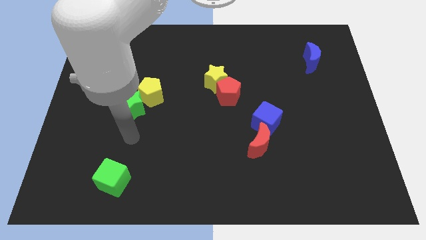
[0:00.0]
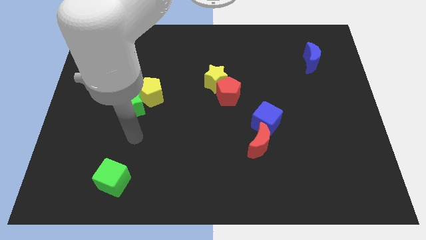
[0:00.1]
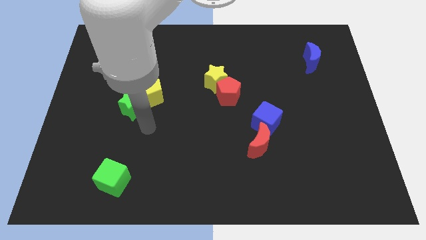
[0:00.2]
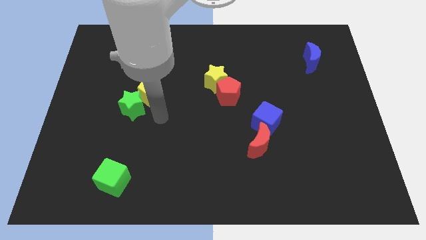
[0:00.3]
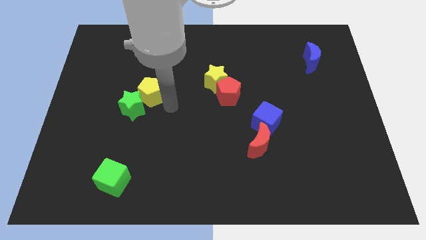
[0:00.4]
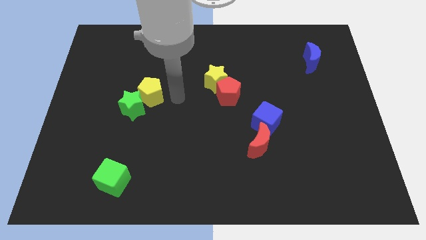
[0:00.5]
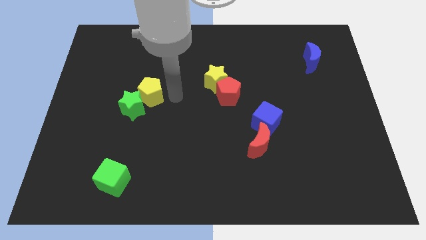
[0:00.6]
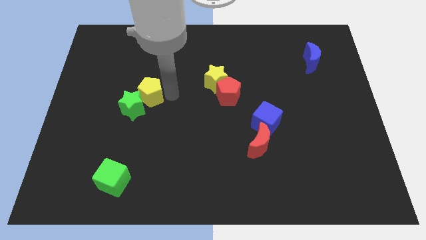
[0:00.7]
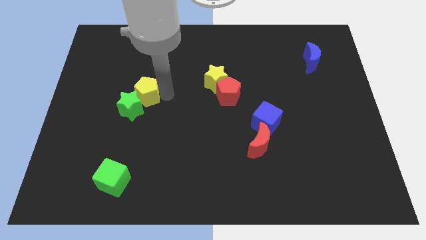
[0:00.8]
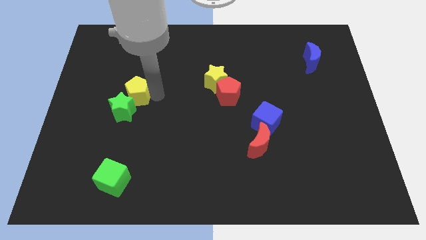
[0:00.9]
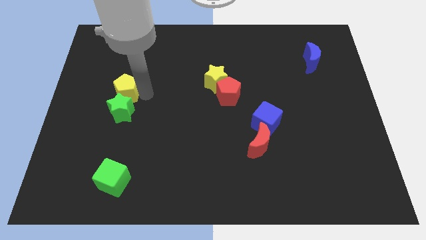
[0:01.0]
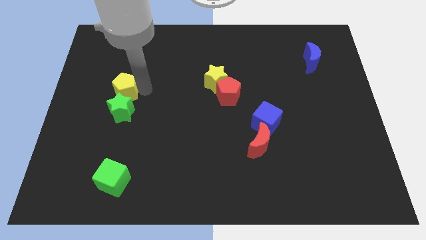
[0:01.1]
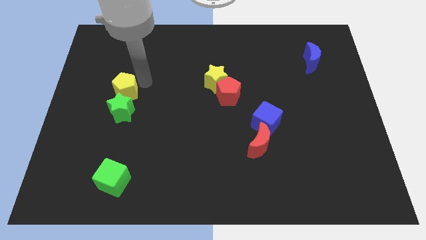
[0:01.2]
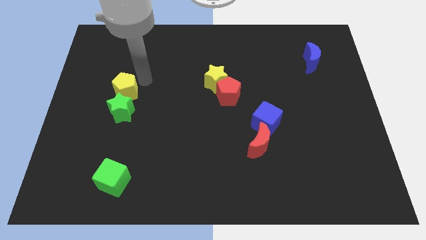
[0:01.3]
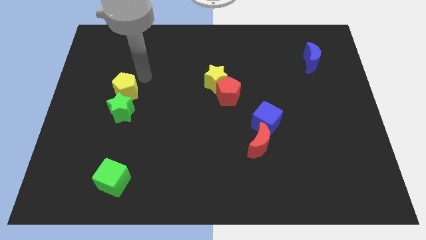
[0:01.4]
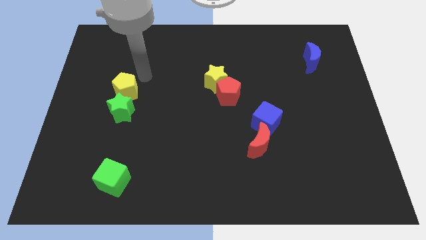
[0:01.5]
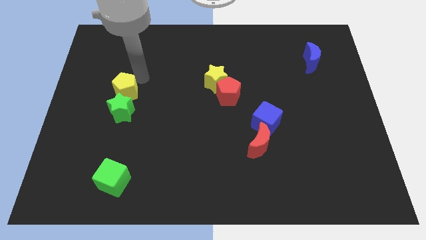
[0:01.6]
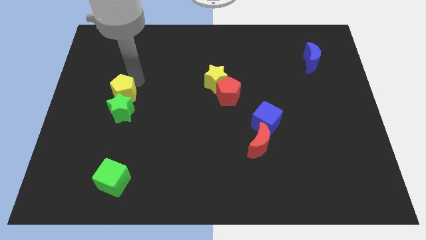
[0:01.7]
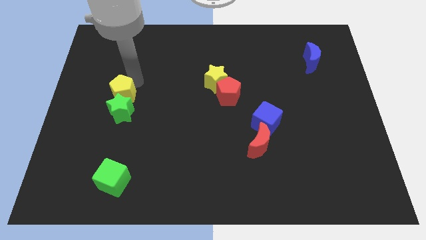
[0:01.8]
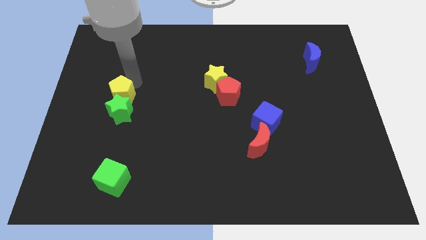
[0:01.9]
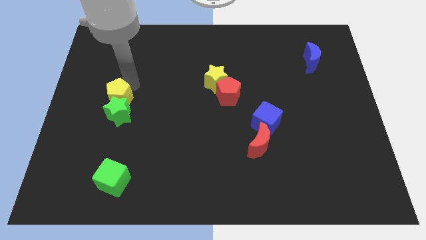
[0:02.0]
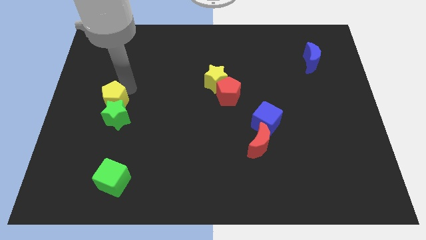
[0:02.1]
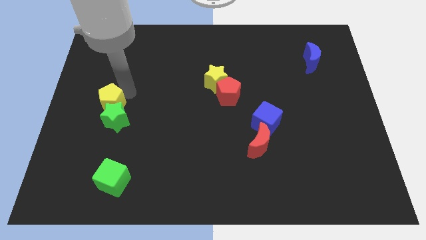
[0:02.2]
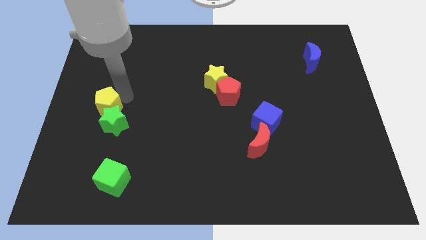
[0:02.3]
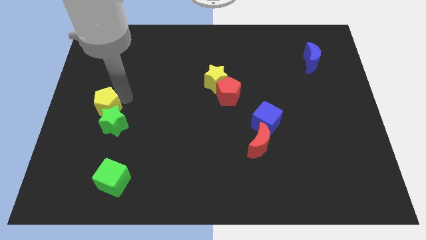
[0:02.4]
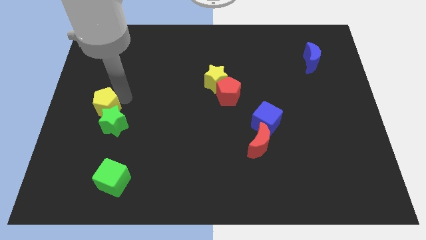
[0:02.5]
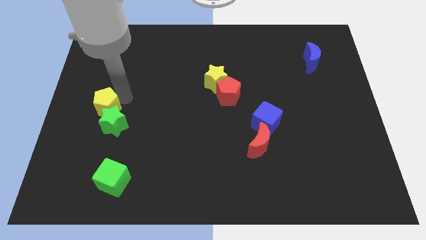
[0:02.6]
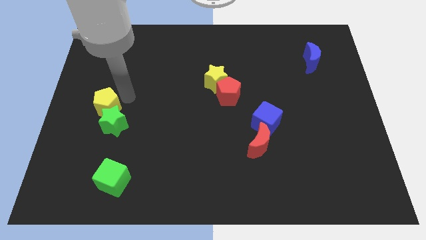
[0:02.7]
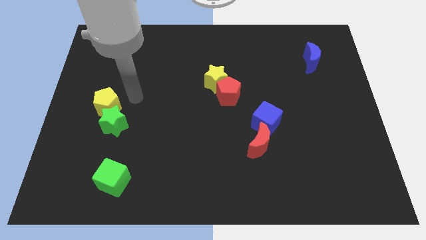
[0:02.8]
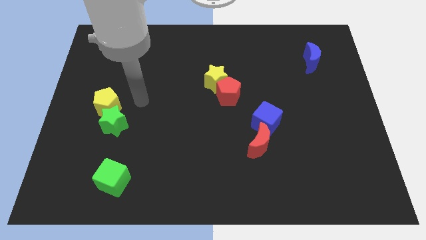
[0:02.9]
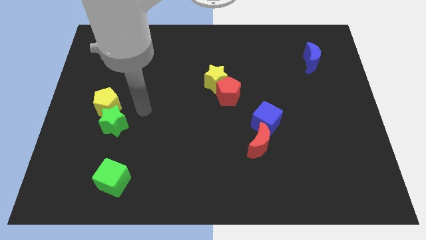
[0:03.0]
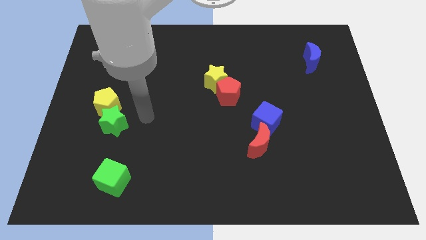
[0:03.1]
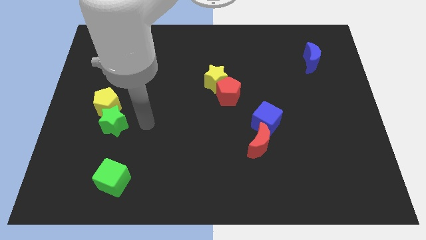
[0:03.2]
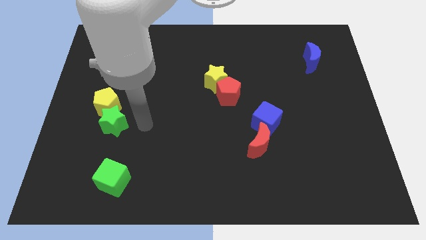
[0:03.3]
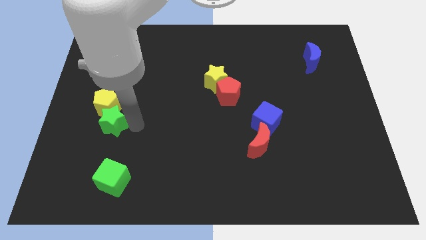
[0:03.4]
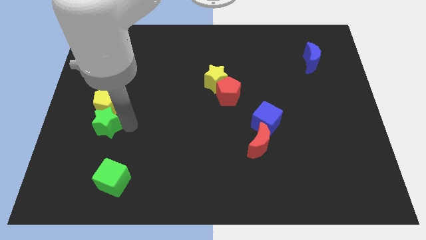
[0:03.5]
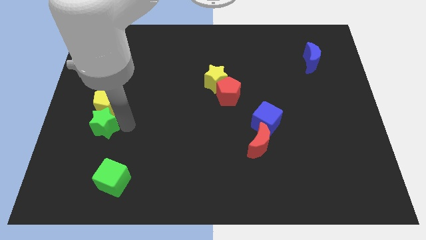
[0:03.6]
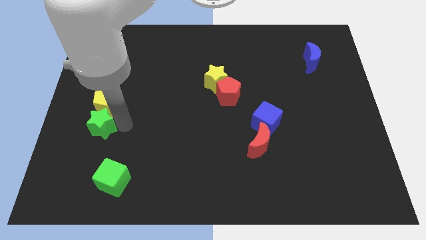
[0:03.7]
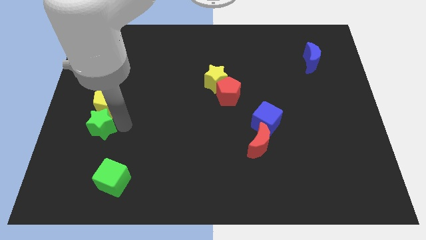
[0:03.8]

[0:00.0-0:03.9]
move your arm close to the green star

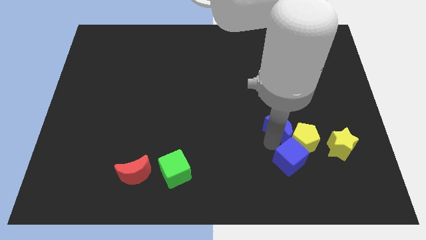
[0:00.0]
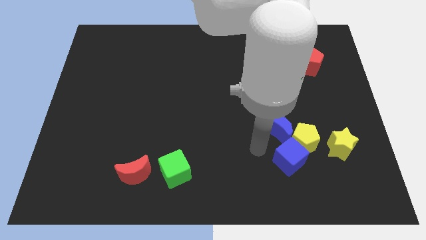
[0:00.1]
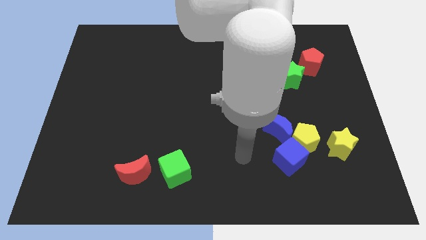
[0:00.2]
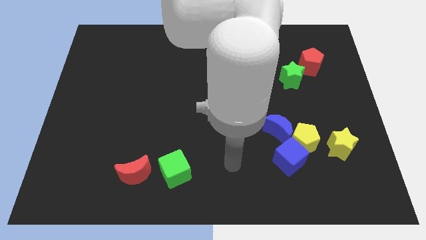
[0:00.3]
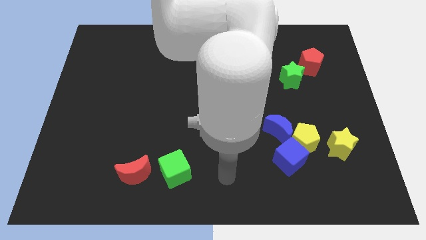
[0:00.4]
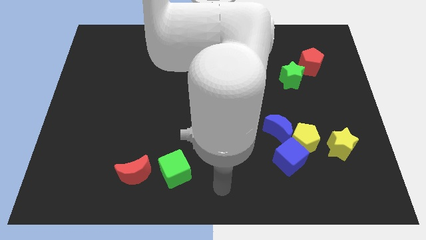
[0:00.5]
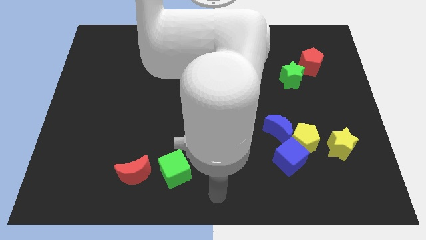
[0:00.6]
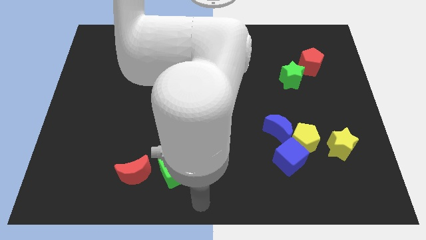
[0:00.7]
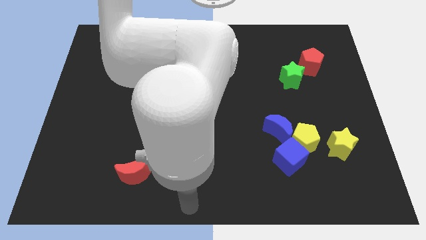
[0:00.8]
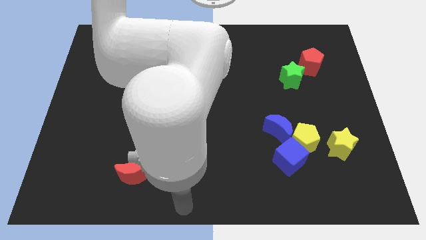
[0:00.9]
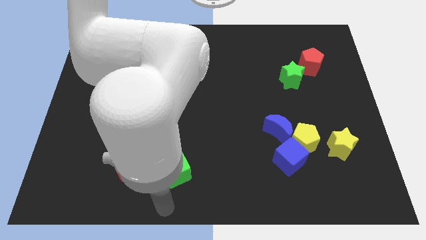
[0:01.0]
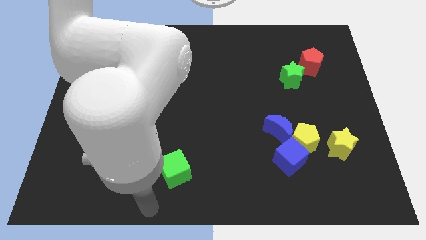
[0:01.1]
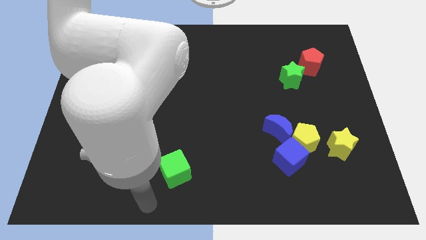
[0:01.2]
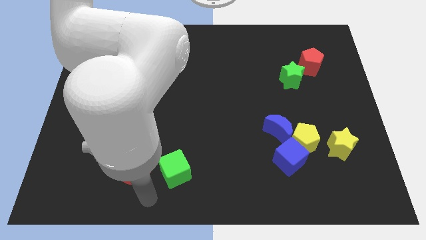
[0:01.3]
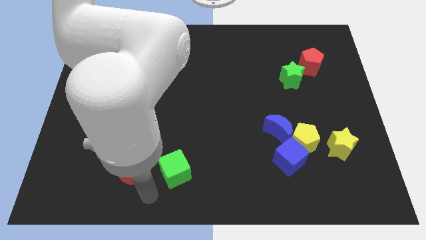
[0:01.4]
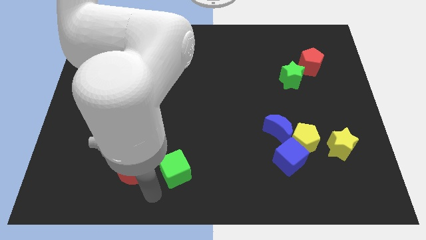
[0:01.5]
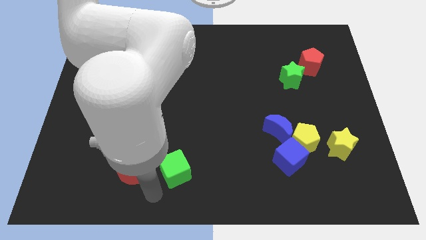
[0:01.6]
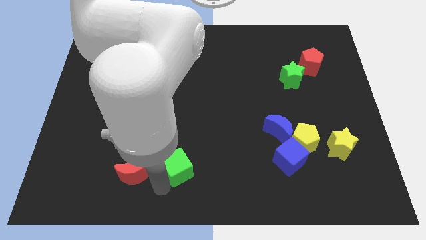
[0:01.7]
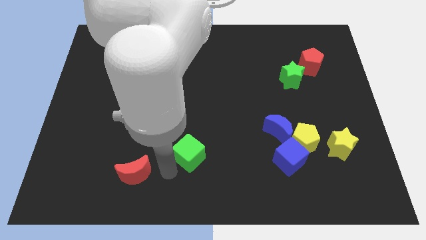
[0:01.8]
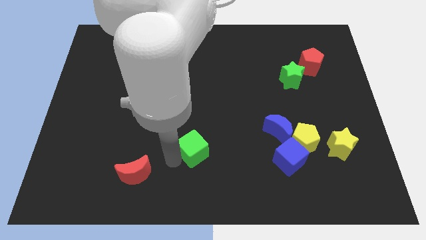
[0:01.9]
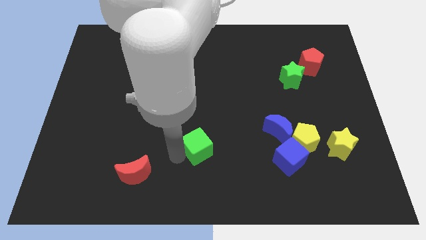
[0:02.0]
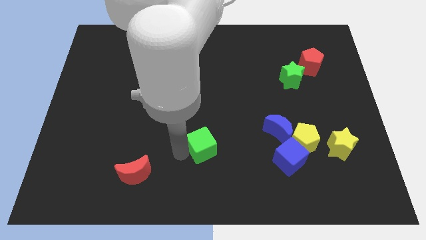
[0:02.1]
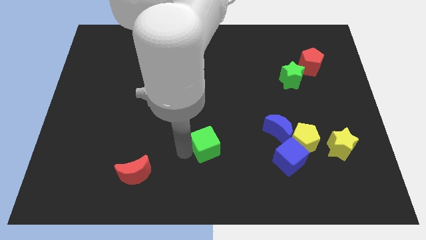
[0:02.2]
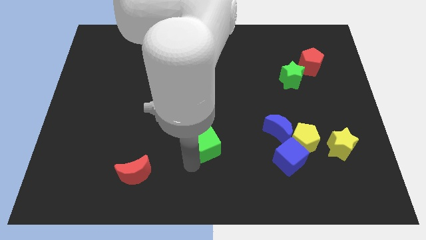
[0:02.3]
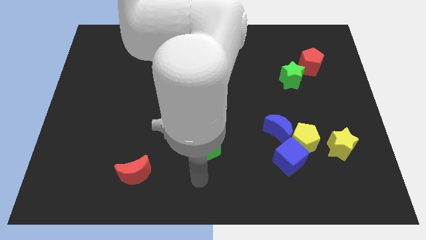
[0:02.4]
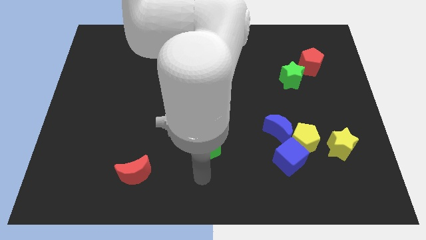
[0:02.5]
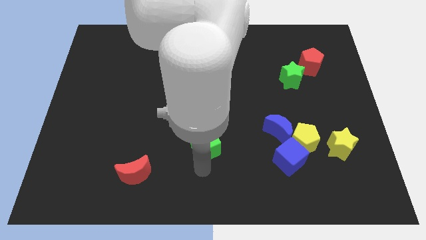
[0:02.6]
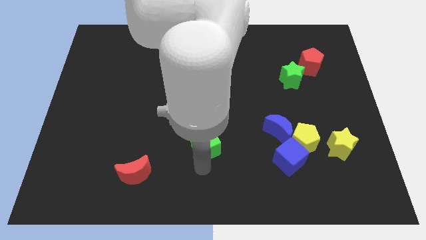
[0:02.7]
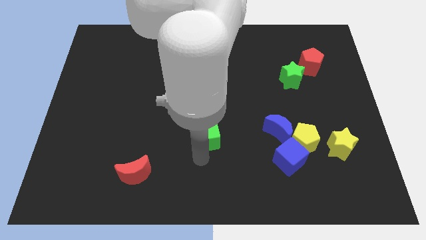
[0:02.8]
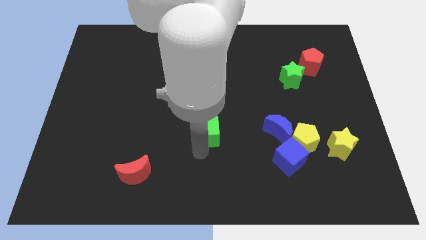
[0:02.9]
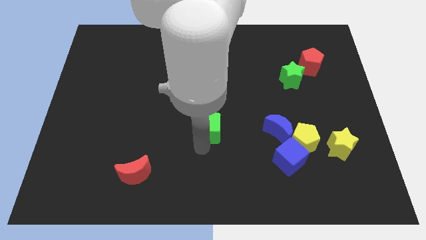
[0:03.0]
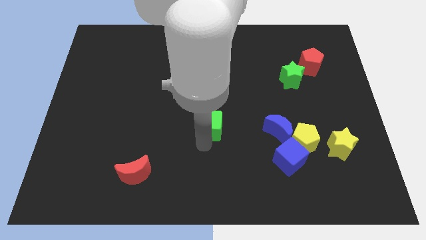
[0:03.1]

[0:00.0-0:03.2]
place the green cube diagonal to the left to the blue crescent

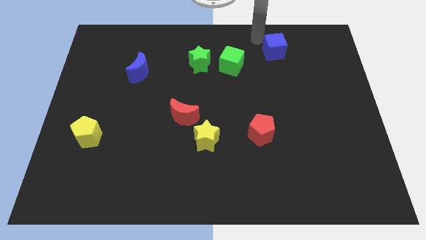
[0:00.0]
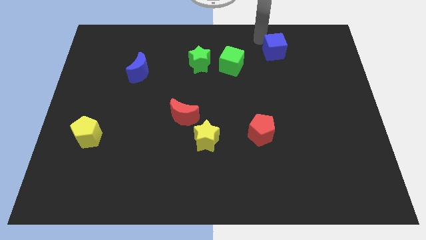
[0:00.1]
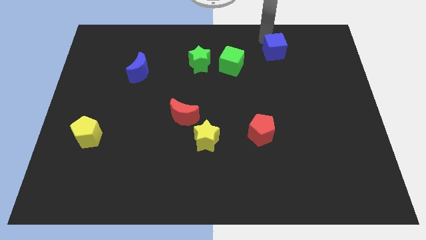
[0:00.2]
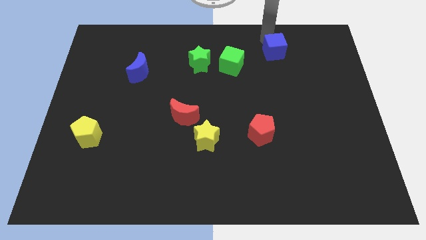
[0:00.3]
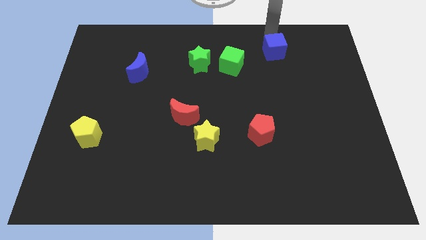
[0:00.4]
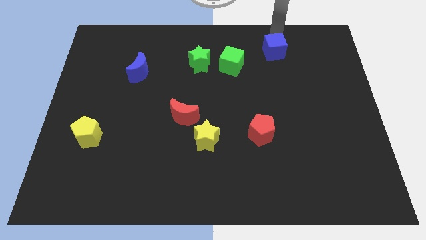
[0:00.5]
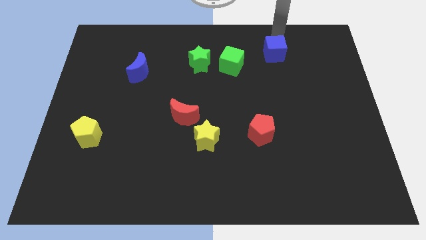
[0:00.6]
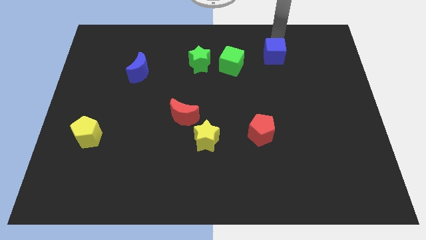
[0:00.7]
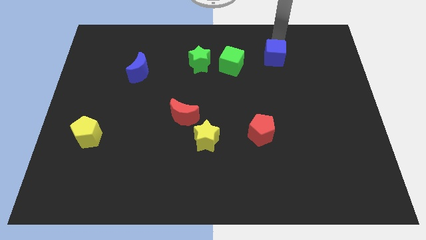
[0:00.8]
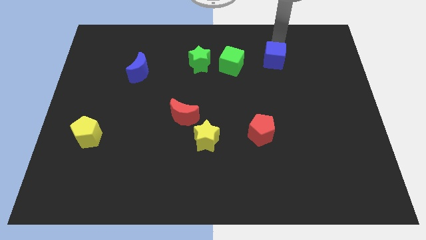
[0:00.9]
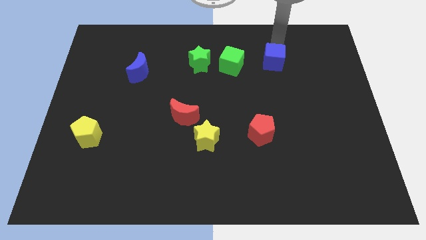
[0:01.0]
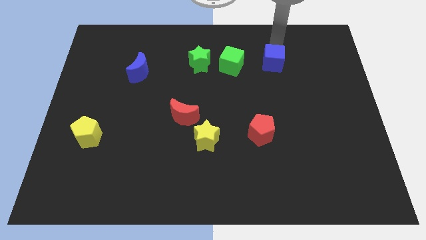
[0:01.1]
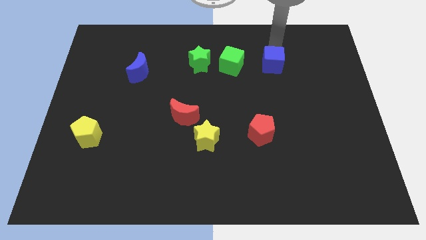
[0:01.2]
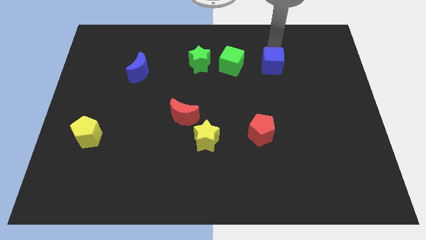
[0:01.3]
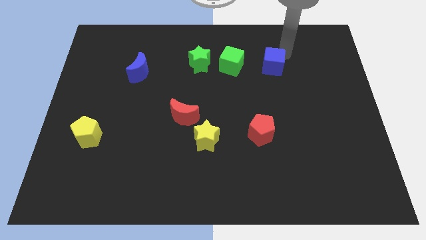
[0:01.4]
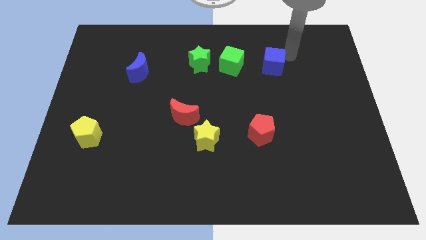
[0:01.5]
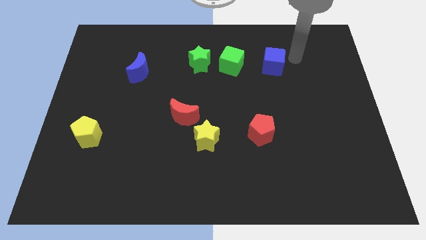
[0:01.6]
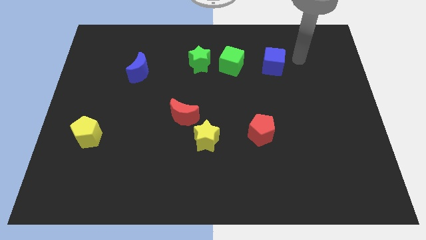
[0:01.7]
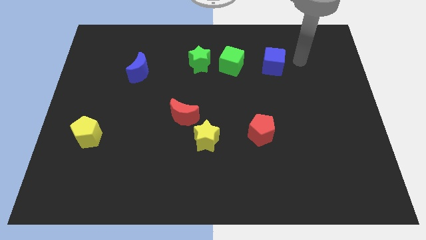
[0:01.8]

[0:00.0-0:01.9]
push the blue cube slightly downward
